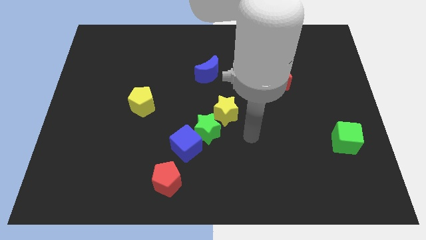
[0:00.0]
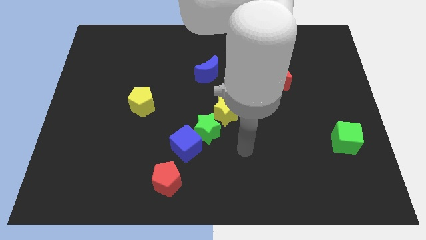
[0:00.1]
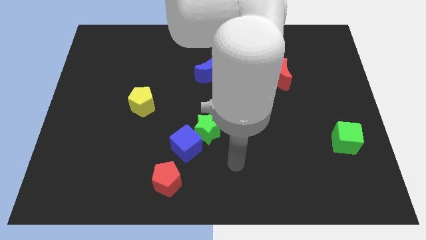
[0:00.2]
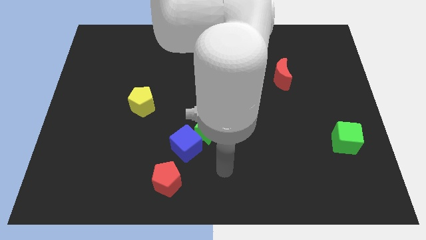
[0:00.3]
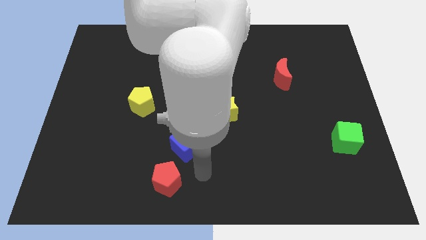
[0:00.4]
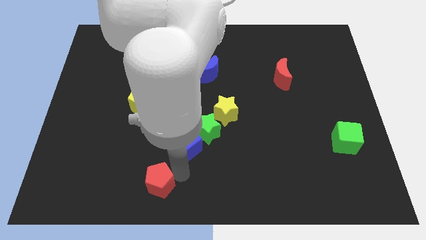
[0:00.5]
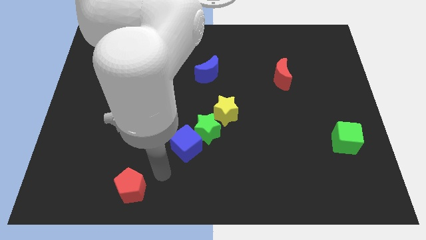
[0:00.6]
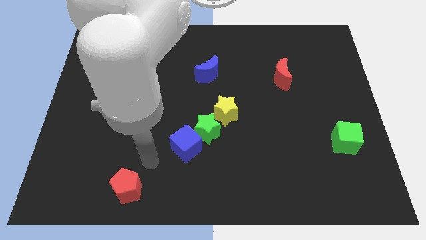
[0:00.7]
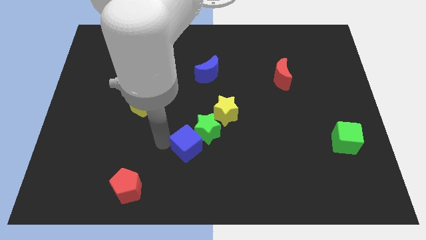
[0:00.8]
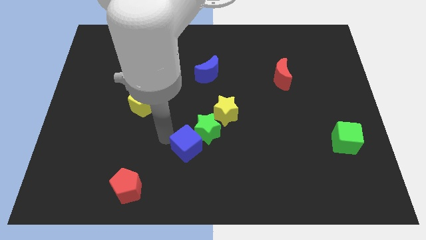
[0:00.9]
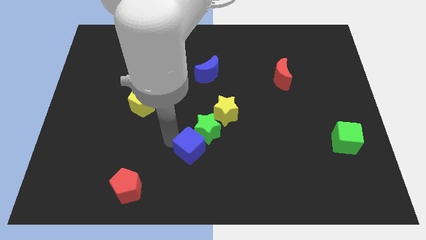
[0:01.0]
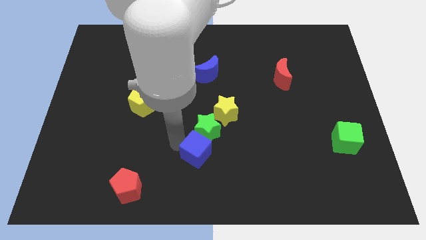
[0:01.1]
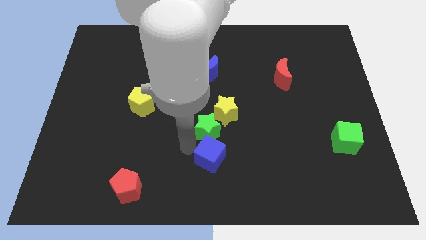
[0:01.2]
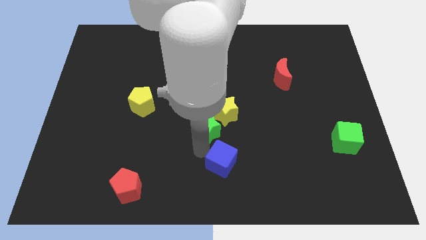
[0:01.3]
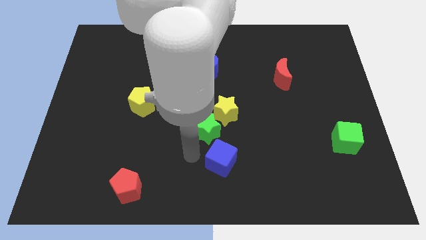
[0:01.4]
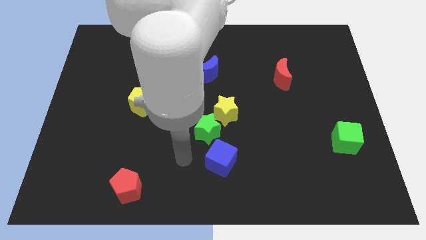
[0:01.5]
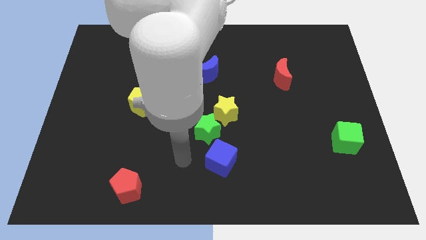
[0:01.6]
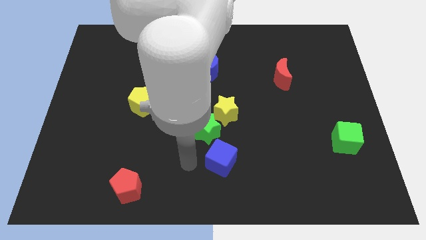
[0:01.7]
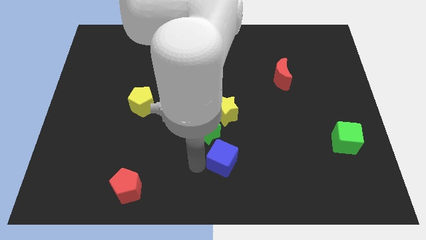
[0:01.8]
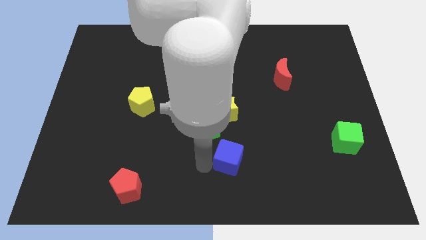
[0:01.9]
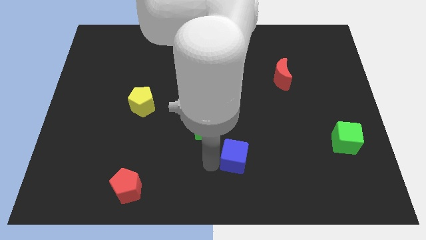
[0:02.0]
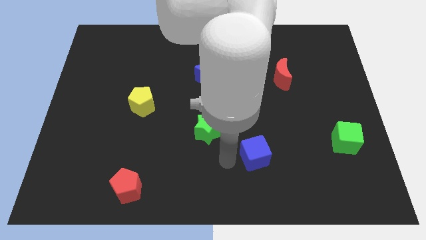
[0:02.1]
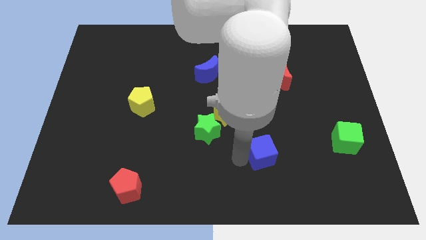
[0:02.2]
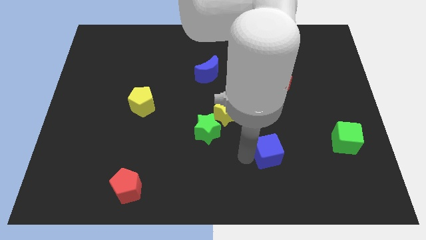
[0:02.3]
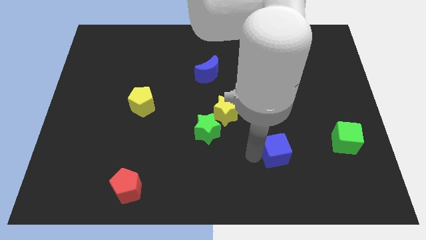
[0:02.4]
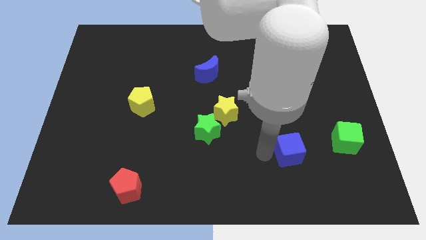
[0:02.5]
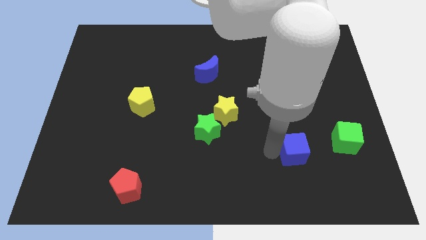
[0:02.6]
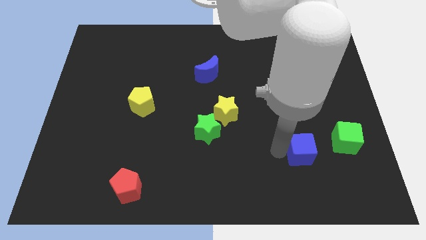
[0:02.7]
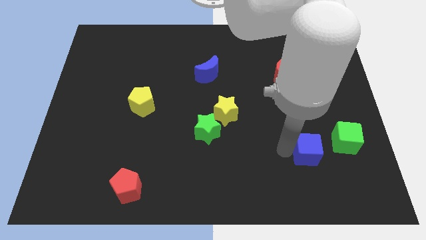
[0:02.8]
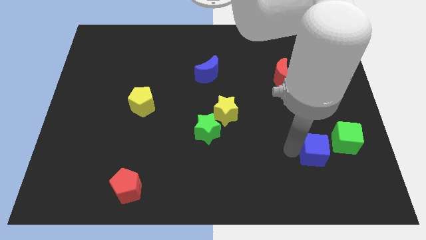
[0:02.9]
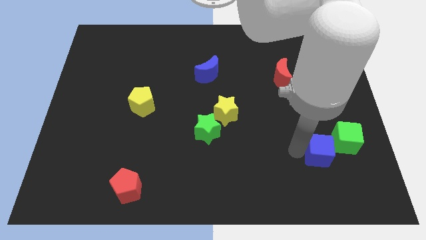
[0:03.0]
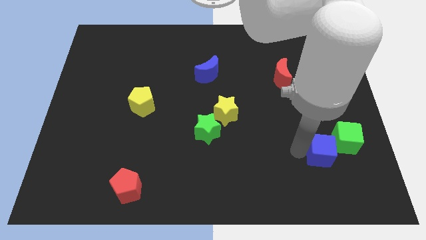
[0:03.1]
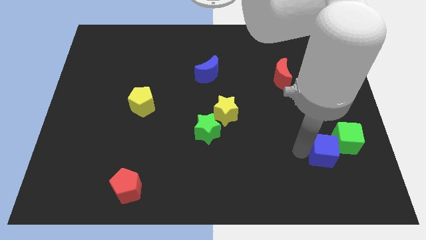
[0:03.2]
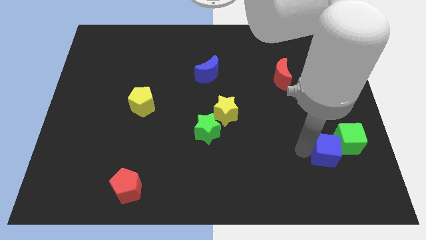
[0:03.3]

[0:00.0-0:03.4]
slide the blue cube towards the green cube

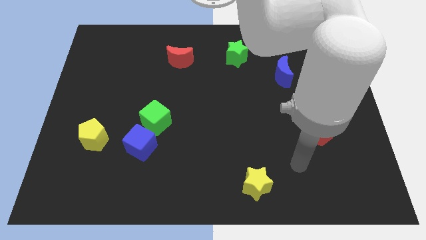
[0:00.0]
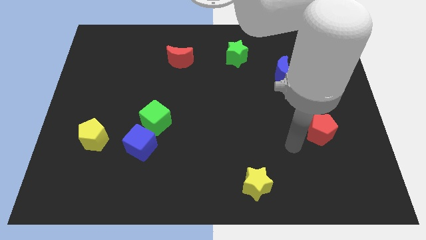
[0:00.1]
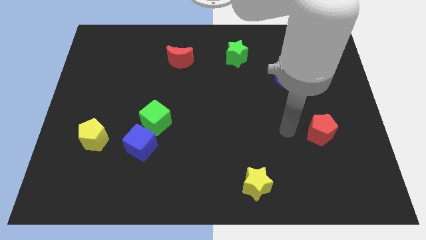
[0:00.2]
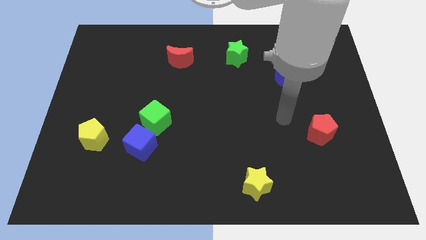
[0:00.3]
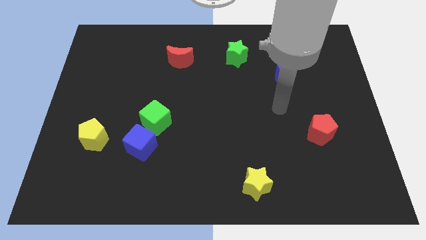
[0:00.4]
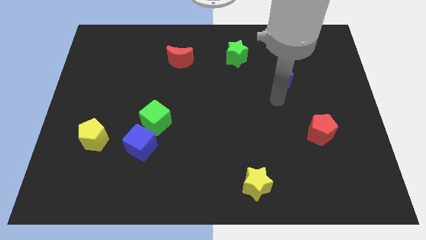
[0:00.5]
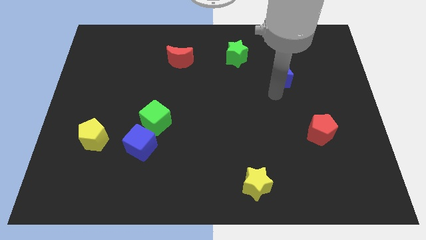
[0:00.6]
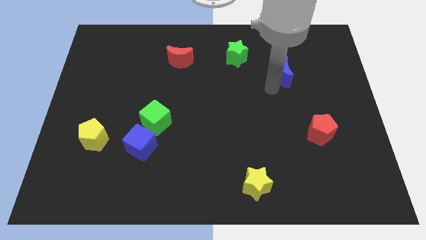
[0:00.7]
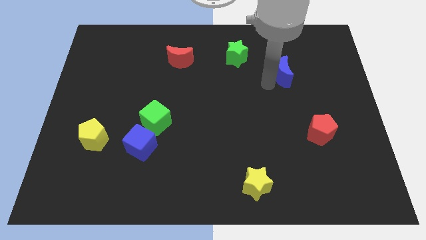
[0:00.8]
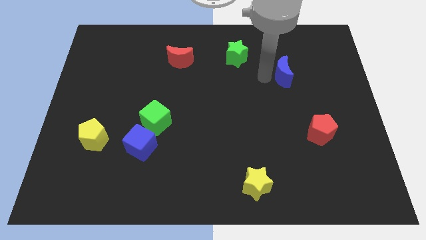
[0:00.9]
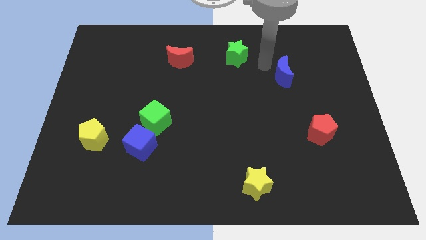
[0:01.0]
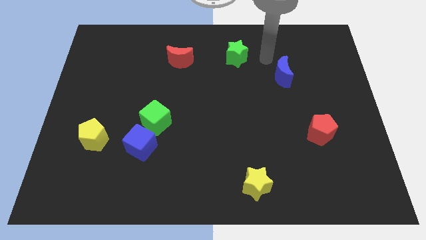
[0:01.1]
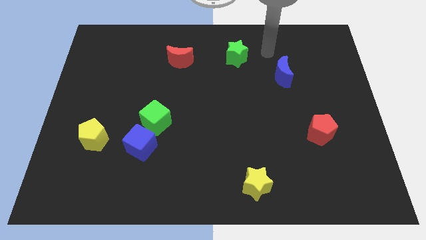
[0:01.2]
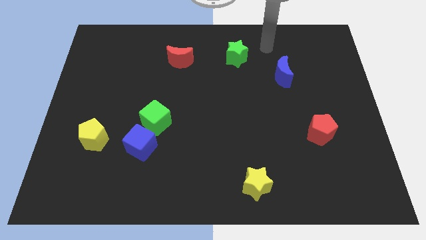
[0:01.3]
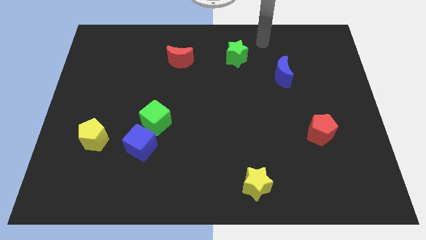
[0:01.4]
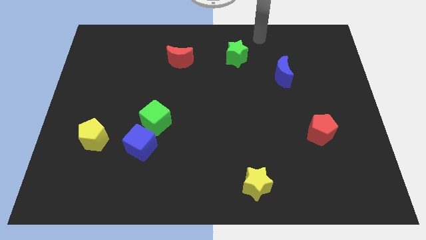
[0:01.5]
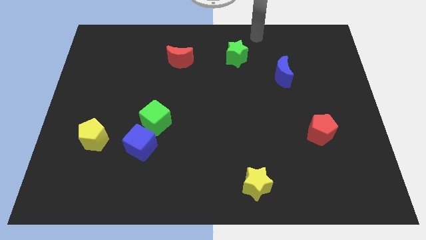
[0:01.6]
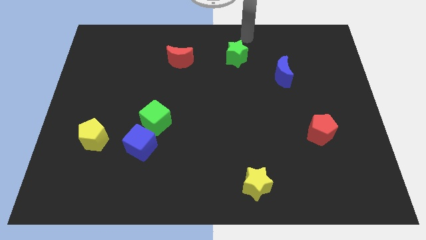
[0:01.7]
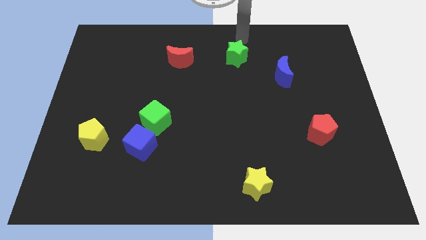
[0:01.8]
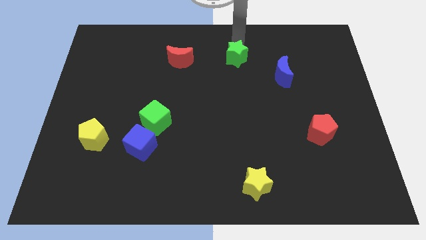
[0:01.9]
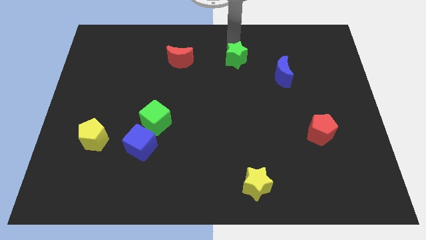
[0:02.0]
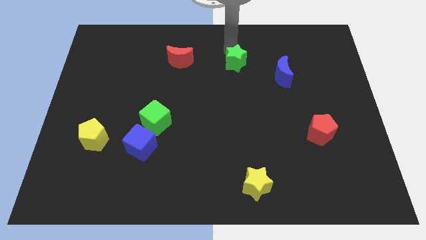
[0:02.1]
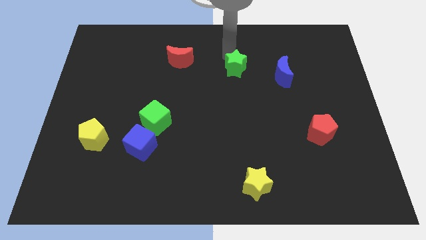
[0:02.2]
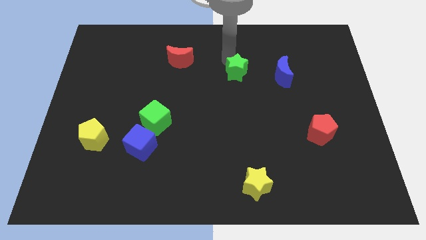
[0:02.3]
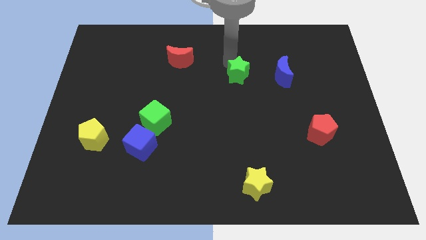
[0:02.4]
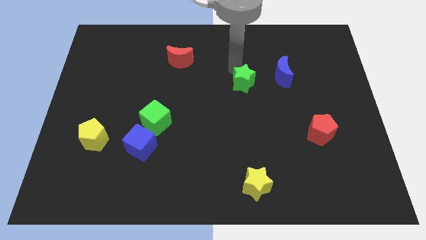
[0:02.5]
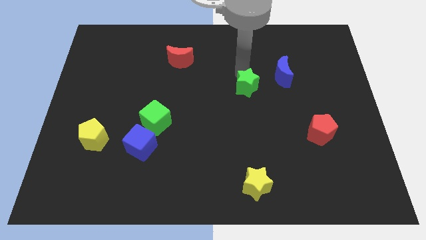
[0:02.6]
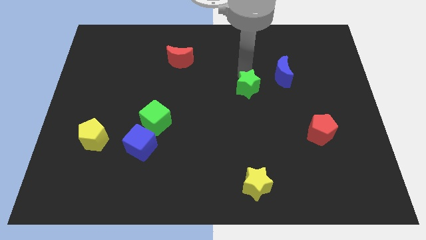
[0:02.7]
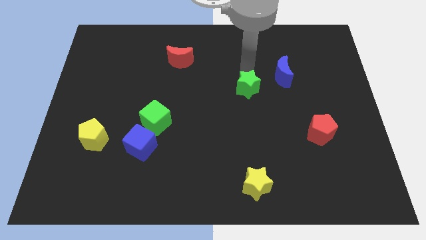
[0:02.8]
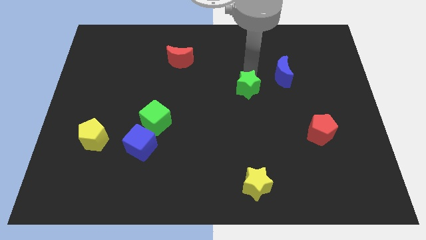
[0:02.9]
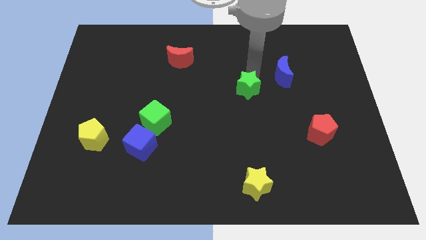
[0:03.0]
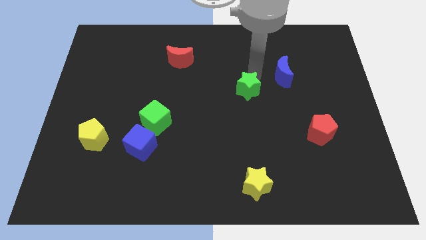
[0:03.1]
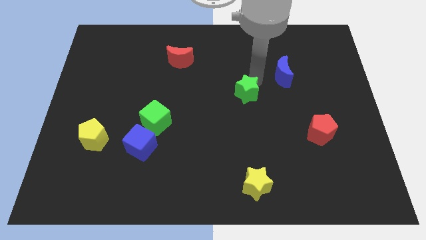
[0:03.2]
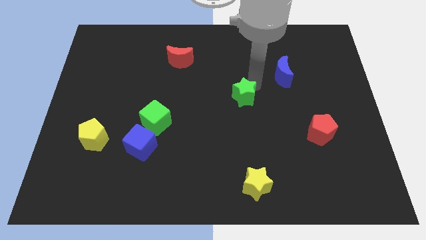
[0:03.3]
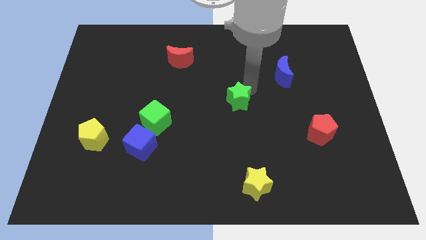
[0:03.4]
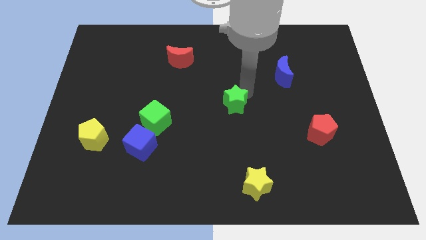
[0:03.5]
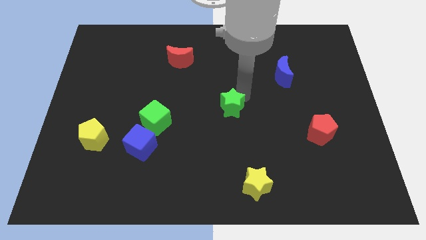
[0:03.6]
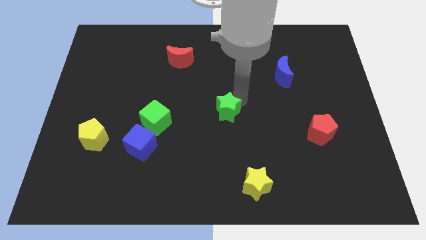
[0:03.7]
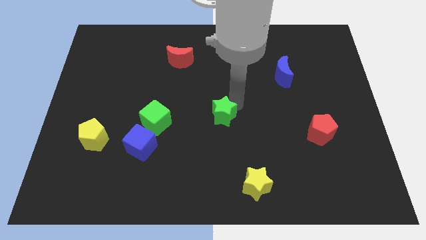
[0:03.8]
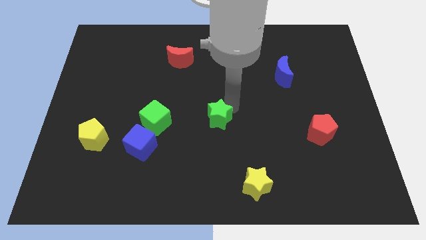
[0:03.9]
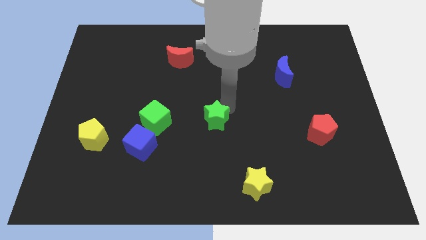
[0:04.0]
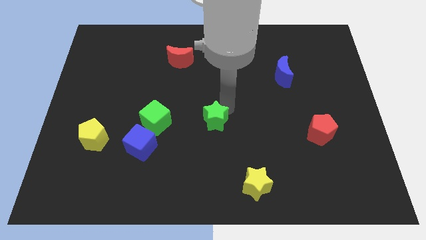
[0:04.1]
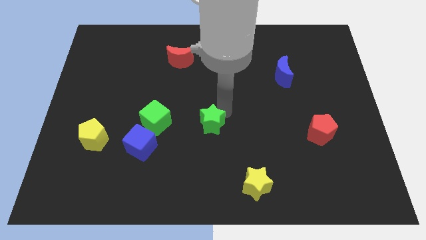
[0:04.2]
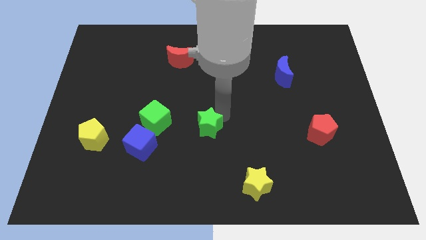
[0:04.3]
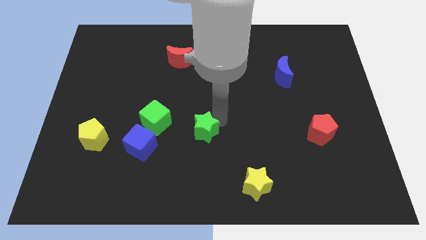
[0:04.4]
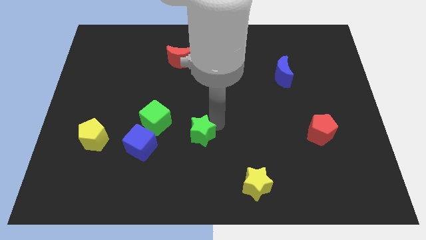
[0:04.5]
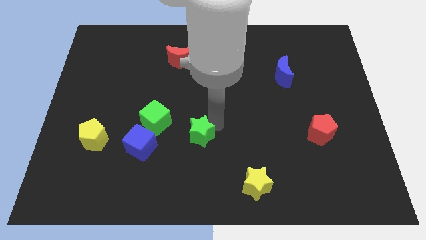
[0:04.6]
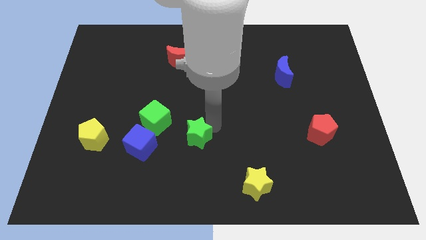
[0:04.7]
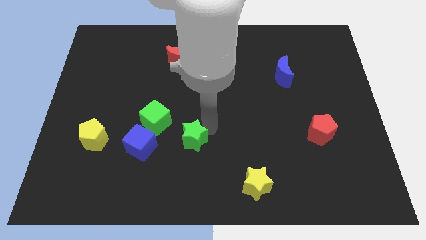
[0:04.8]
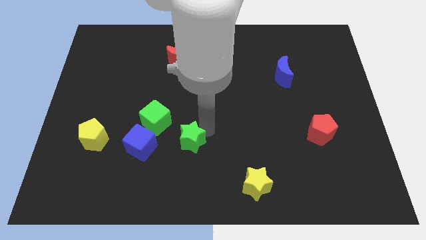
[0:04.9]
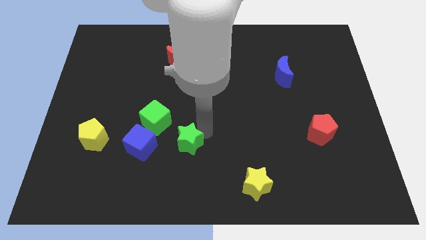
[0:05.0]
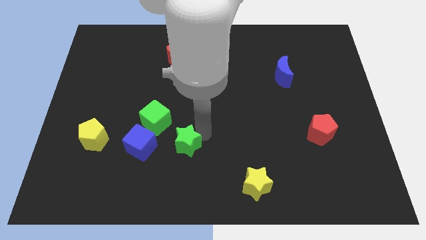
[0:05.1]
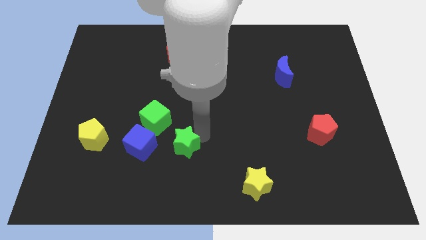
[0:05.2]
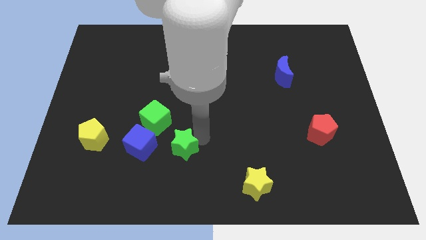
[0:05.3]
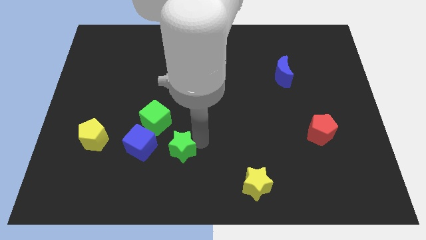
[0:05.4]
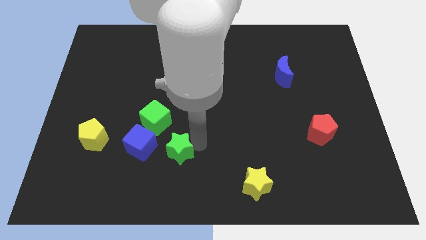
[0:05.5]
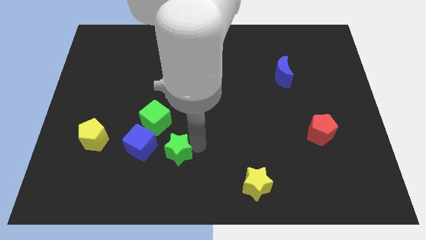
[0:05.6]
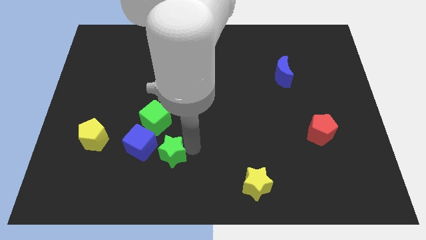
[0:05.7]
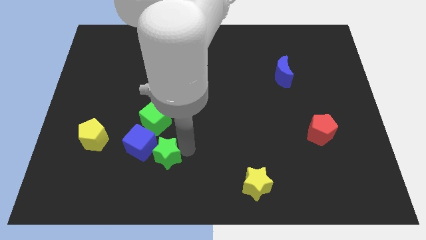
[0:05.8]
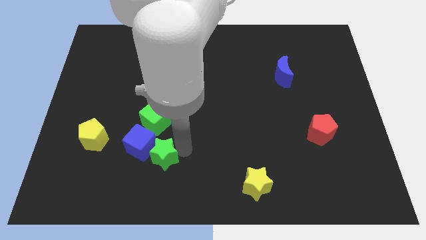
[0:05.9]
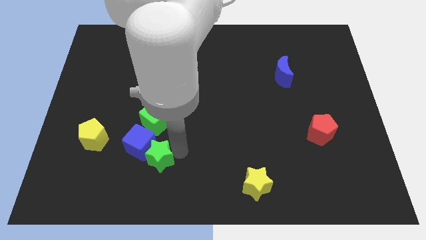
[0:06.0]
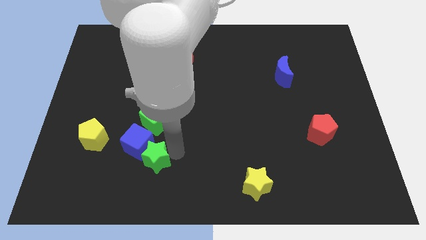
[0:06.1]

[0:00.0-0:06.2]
slide the green star next to the blue cube
